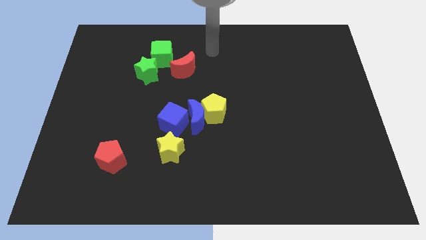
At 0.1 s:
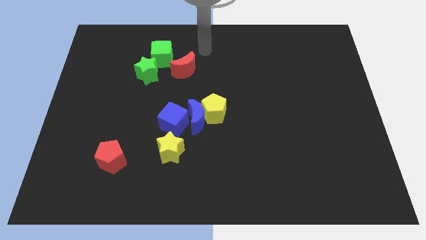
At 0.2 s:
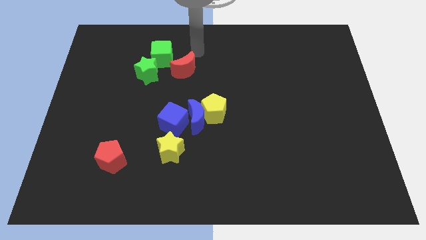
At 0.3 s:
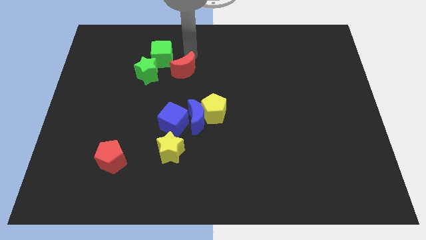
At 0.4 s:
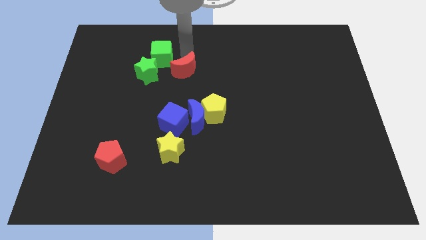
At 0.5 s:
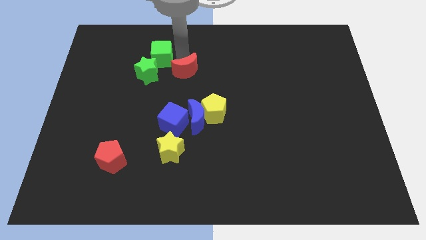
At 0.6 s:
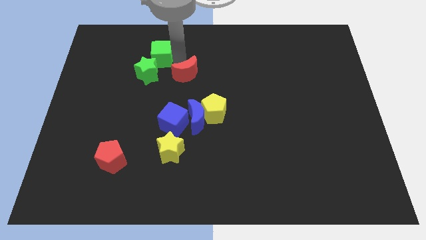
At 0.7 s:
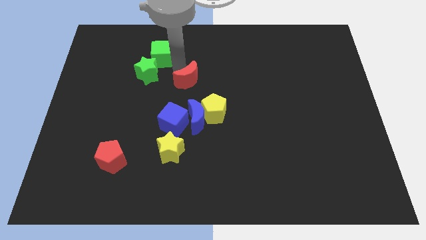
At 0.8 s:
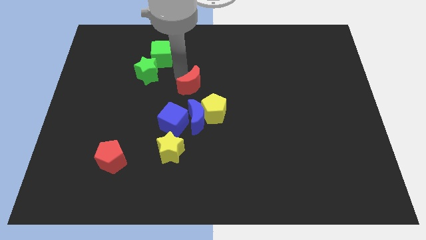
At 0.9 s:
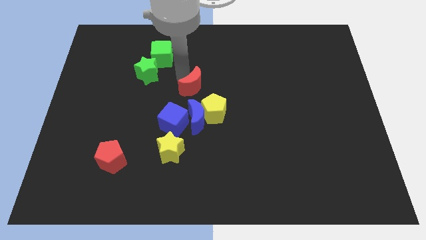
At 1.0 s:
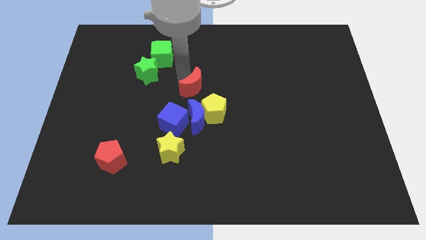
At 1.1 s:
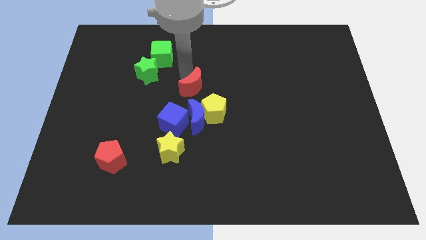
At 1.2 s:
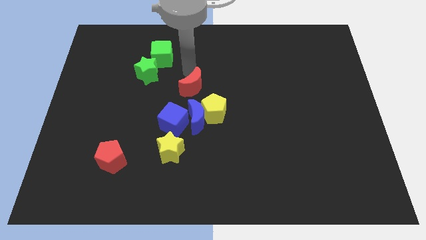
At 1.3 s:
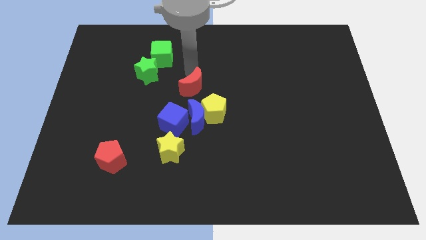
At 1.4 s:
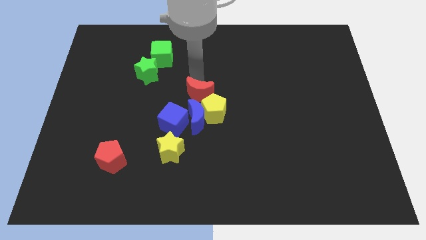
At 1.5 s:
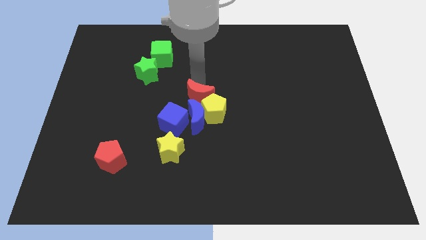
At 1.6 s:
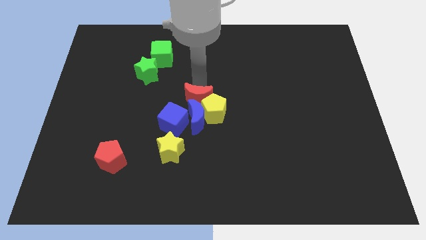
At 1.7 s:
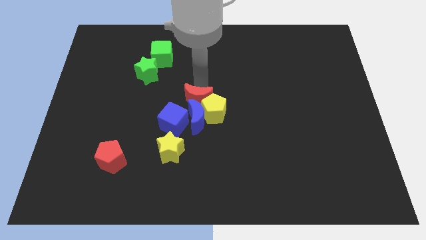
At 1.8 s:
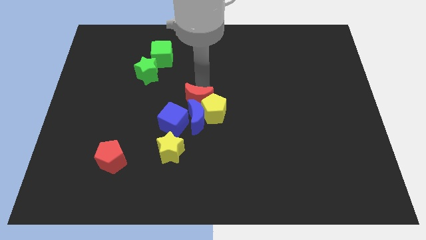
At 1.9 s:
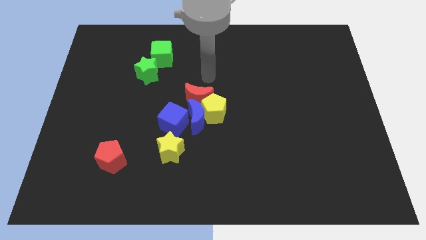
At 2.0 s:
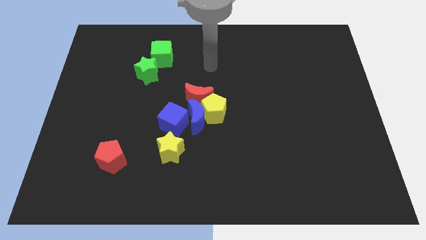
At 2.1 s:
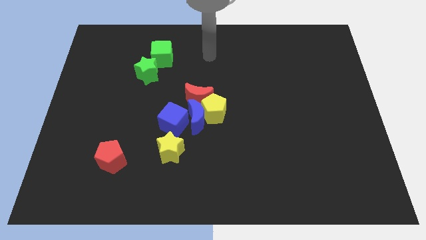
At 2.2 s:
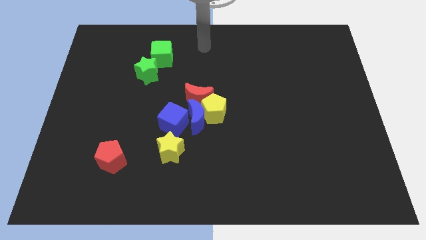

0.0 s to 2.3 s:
push red moon towards teh top of the blue moon and yellow pentagon

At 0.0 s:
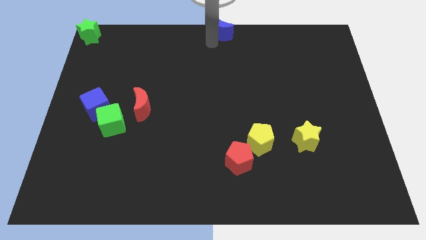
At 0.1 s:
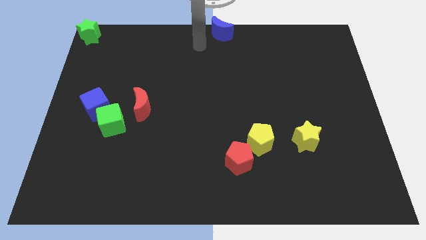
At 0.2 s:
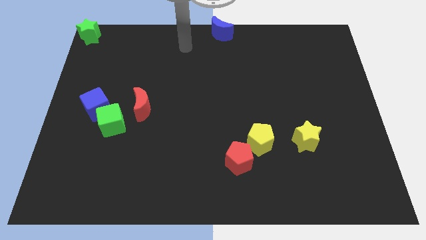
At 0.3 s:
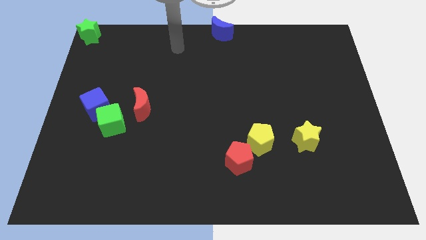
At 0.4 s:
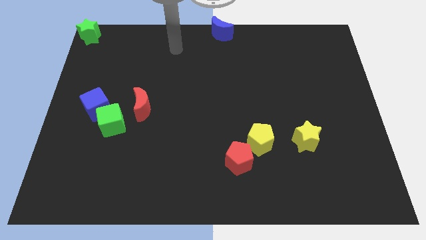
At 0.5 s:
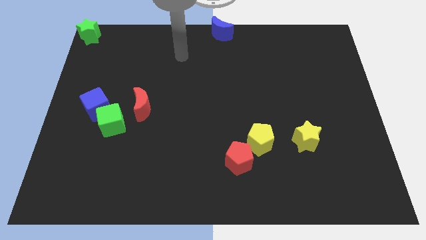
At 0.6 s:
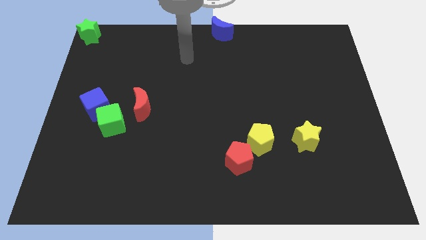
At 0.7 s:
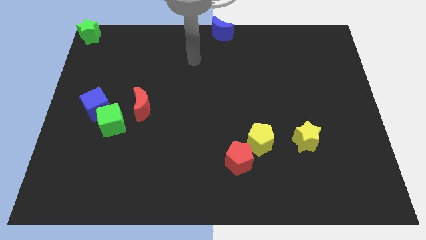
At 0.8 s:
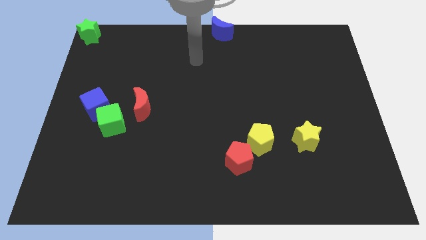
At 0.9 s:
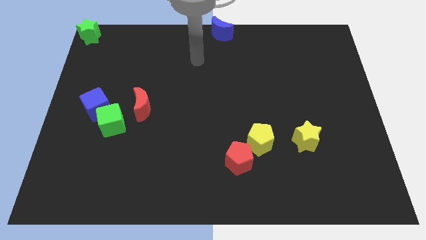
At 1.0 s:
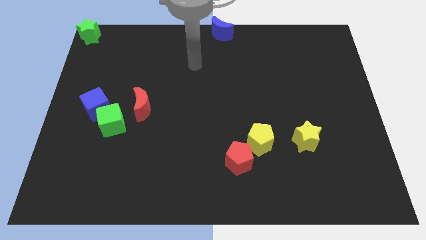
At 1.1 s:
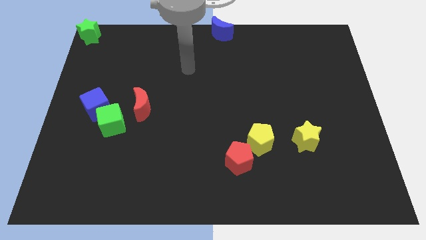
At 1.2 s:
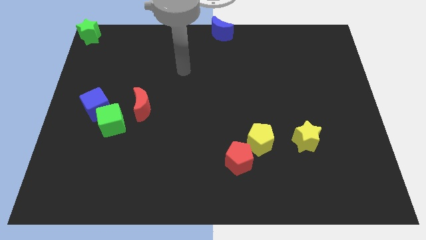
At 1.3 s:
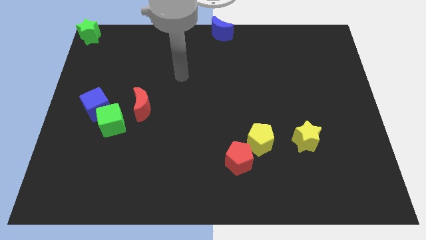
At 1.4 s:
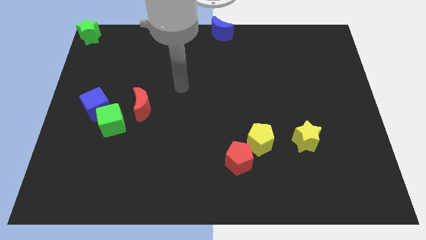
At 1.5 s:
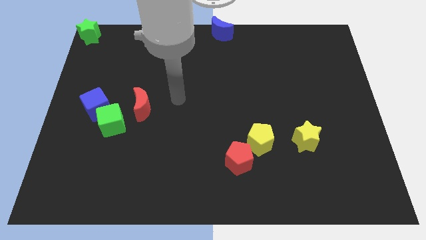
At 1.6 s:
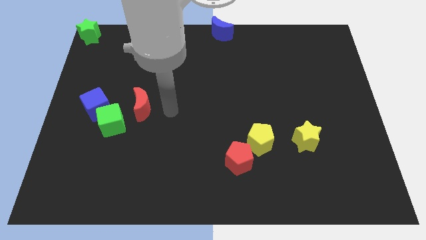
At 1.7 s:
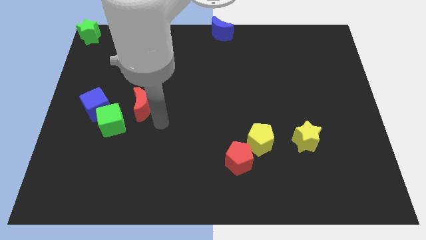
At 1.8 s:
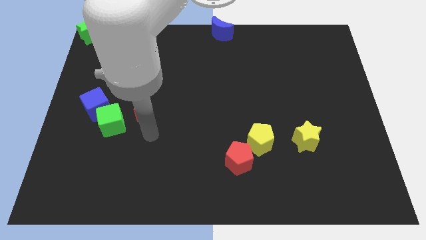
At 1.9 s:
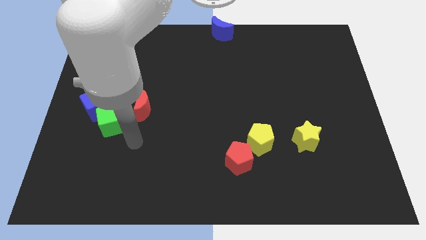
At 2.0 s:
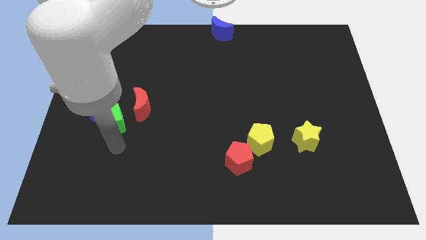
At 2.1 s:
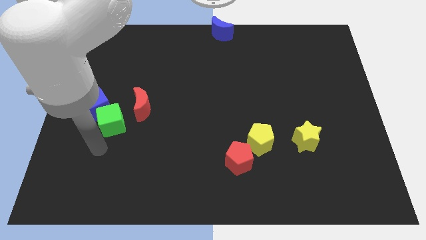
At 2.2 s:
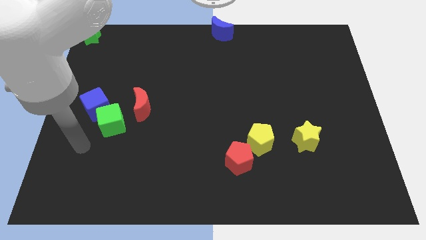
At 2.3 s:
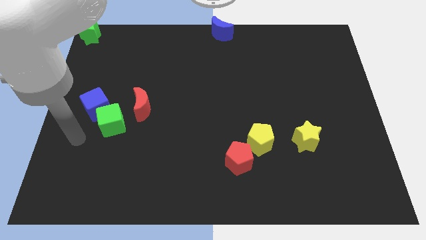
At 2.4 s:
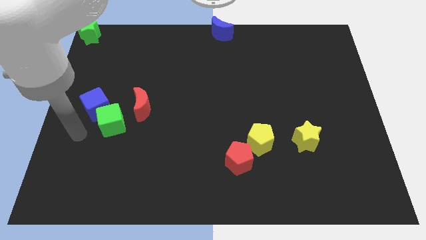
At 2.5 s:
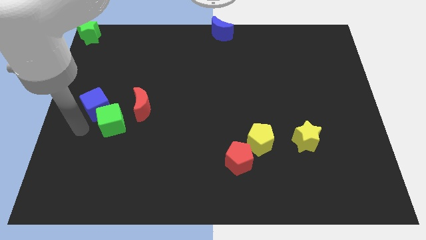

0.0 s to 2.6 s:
move your arm towards the center left side of the board

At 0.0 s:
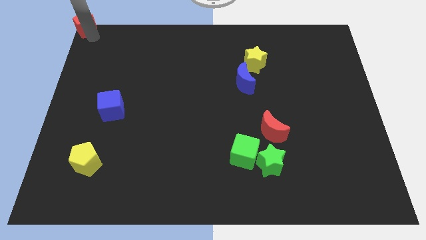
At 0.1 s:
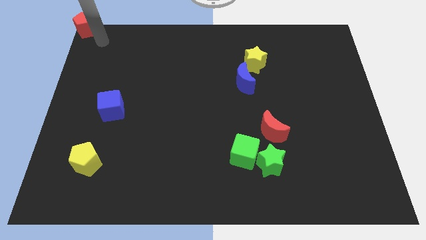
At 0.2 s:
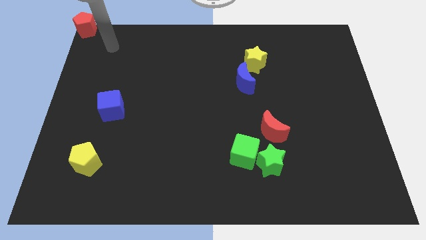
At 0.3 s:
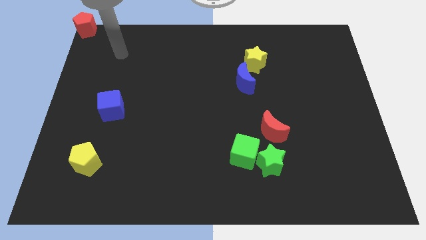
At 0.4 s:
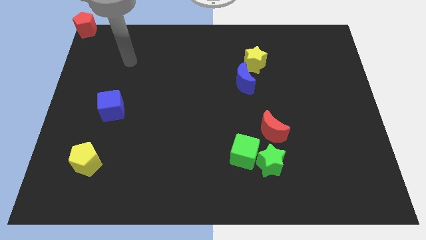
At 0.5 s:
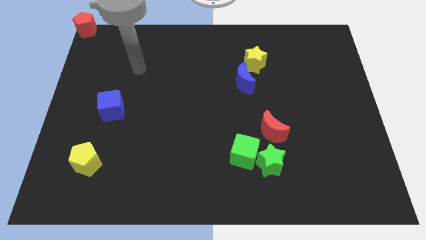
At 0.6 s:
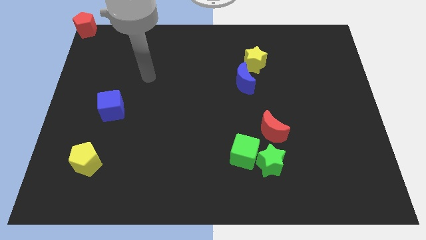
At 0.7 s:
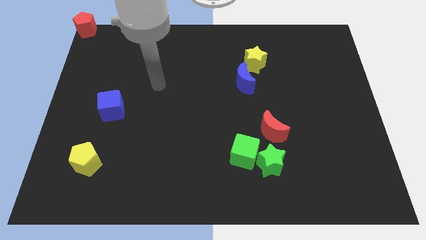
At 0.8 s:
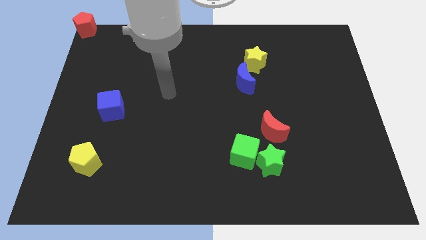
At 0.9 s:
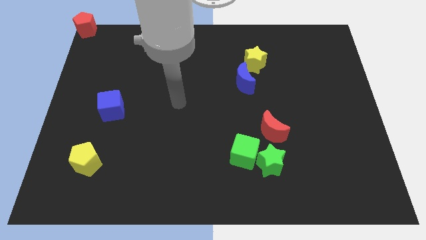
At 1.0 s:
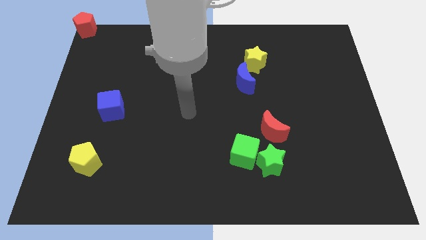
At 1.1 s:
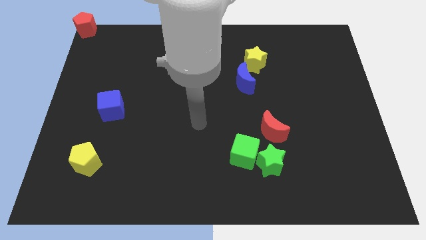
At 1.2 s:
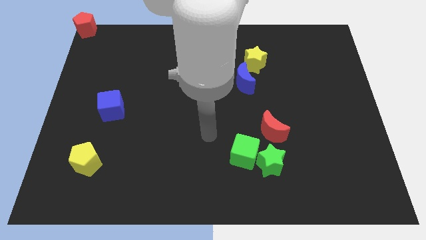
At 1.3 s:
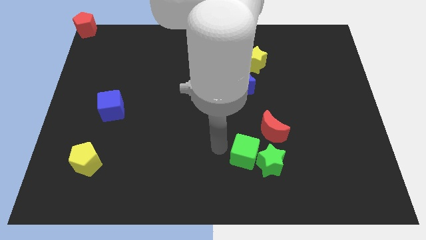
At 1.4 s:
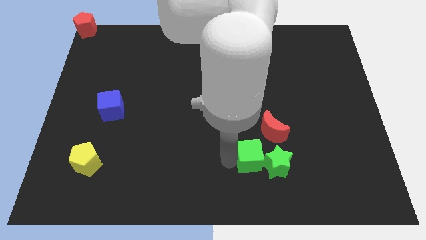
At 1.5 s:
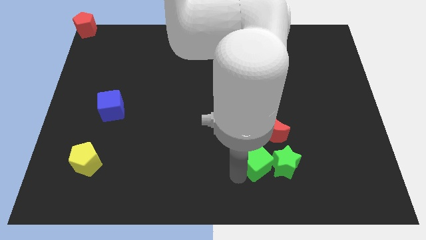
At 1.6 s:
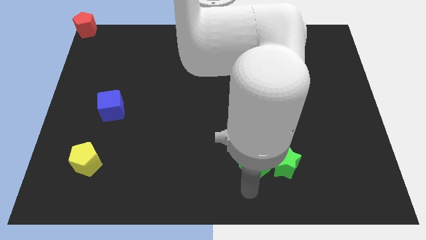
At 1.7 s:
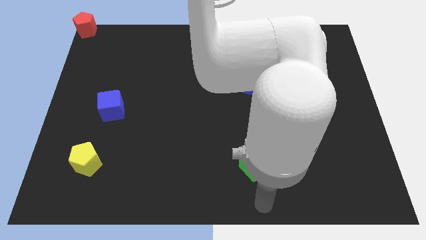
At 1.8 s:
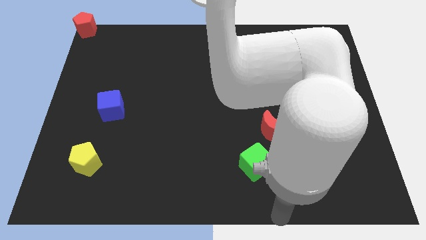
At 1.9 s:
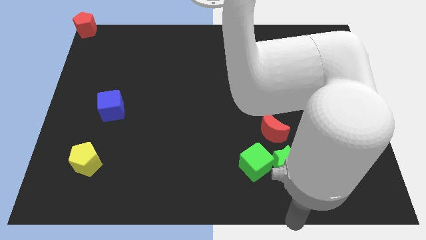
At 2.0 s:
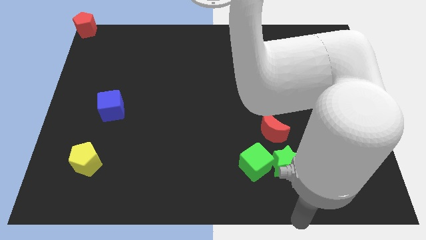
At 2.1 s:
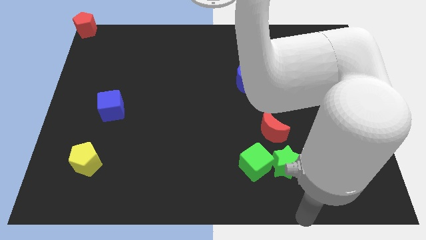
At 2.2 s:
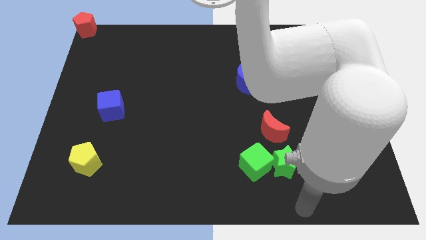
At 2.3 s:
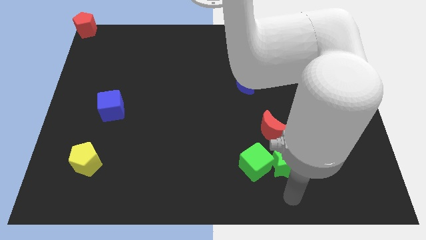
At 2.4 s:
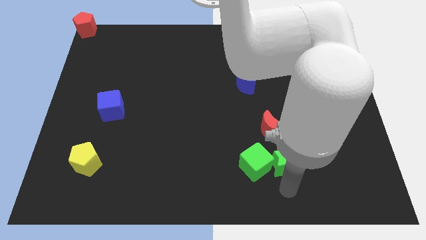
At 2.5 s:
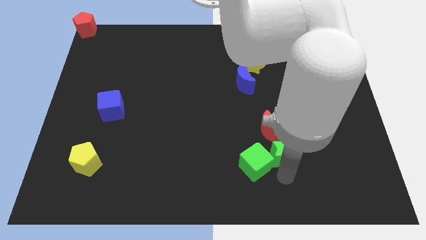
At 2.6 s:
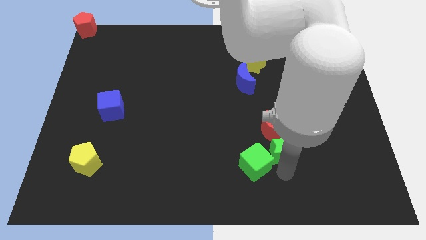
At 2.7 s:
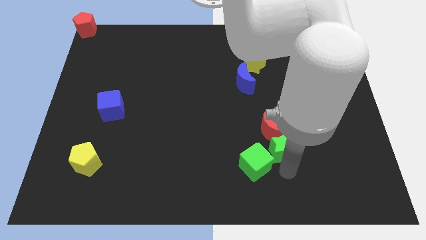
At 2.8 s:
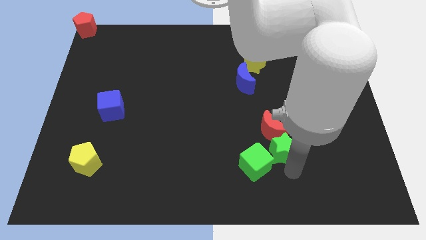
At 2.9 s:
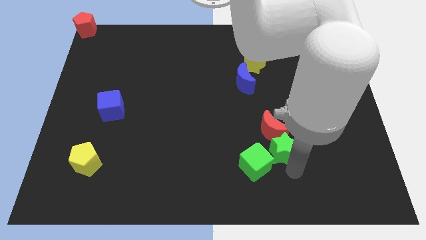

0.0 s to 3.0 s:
slightly push the green blocks towards the right side of the board

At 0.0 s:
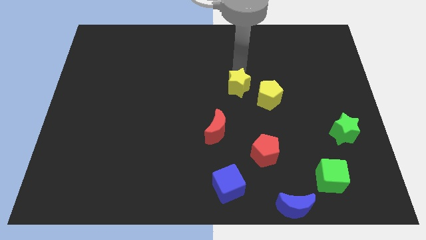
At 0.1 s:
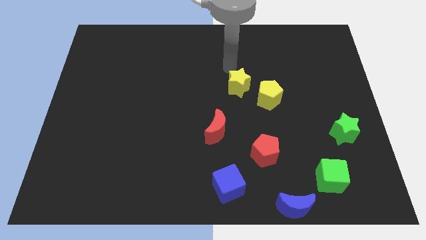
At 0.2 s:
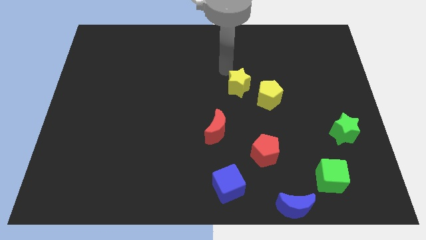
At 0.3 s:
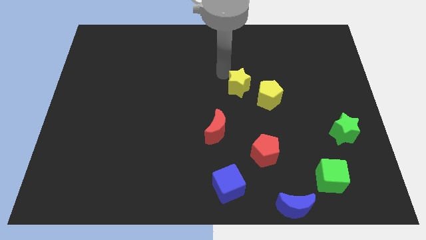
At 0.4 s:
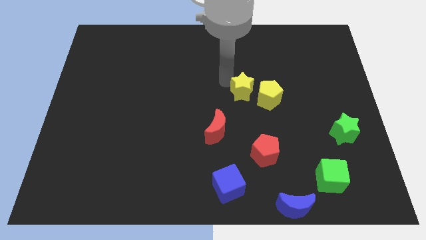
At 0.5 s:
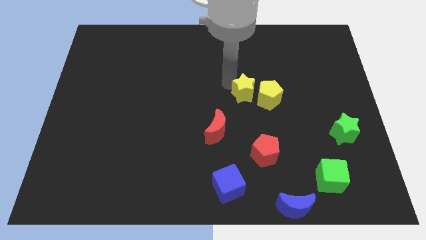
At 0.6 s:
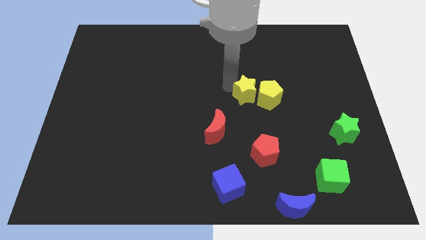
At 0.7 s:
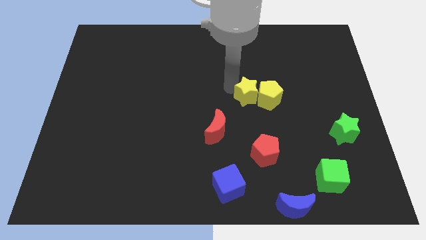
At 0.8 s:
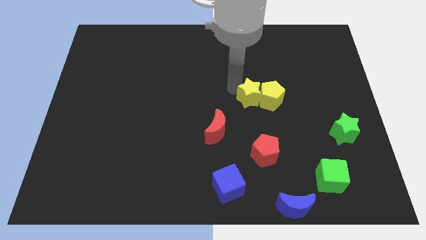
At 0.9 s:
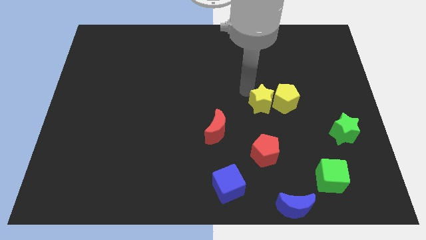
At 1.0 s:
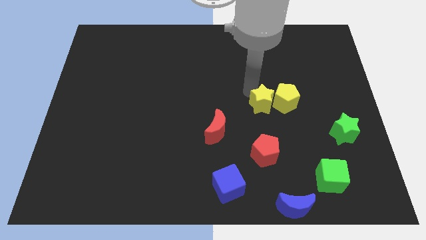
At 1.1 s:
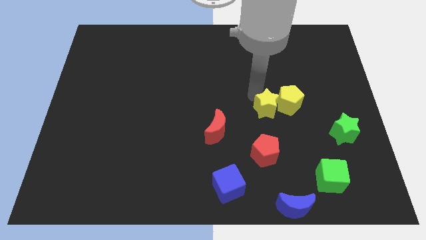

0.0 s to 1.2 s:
push the yellow star into the yellow pentagon
